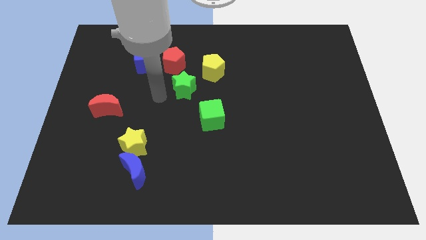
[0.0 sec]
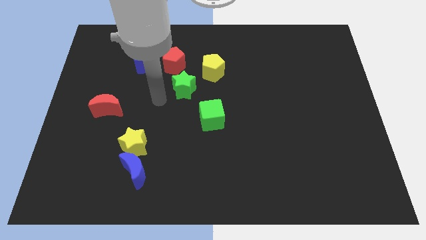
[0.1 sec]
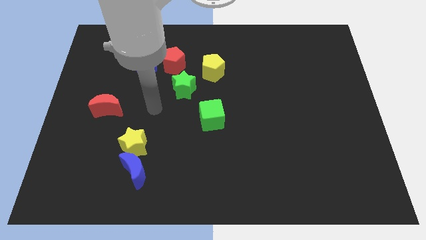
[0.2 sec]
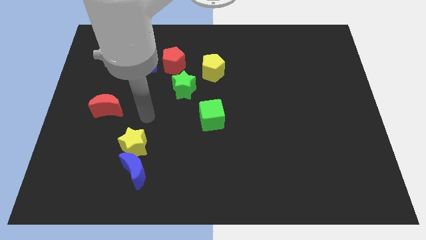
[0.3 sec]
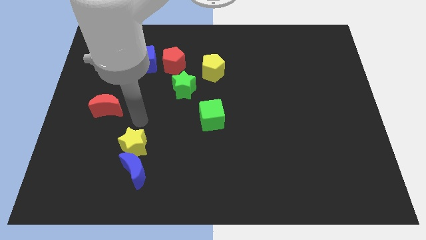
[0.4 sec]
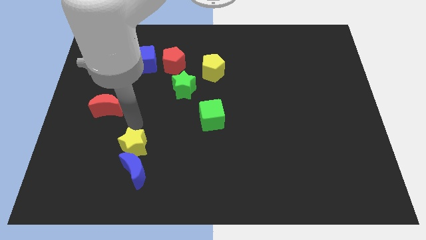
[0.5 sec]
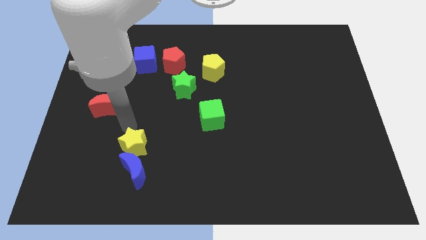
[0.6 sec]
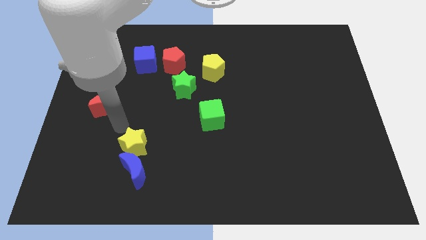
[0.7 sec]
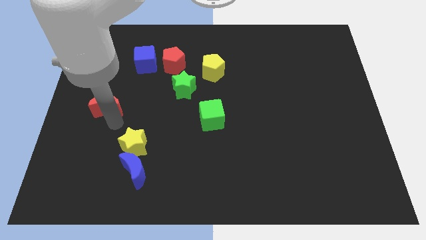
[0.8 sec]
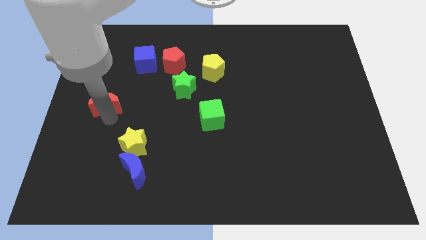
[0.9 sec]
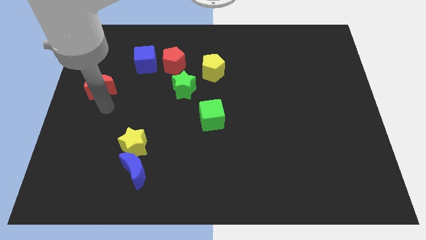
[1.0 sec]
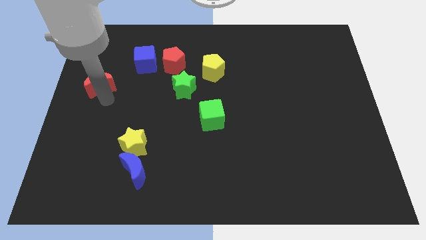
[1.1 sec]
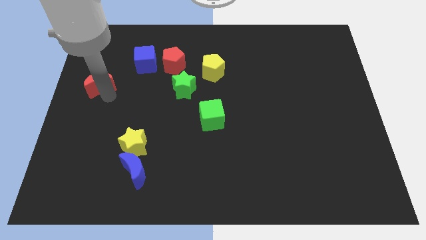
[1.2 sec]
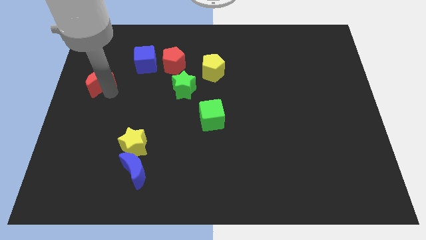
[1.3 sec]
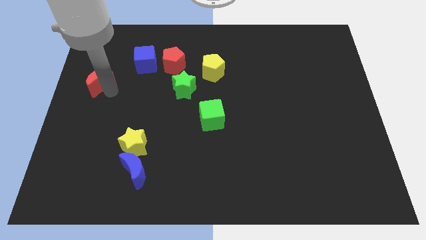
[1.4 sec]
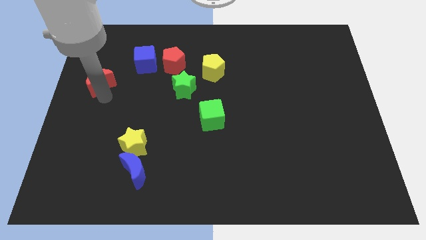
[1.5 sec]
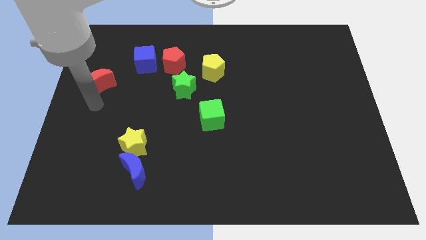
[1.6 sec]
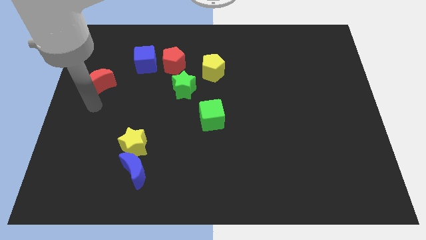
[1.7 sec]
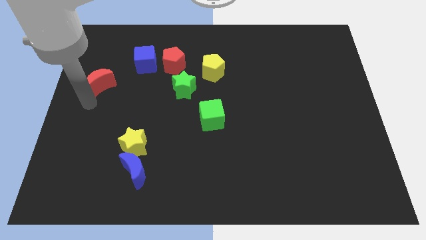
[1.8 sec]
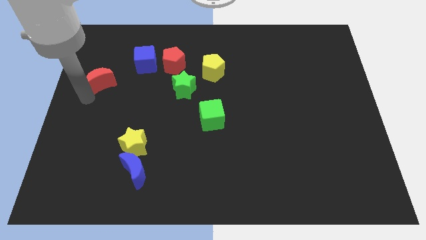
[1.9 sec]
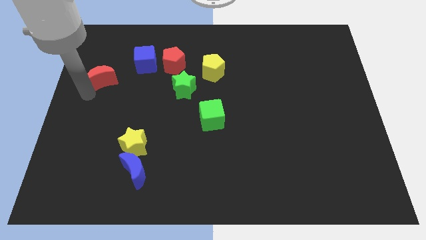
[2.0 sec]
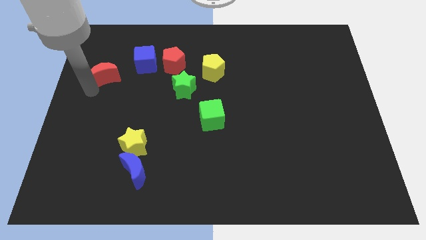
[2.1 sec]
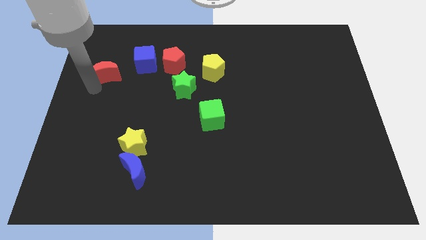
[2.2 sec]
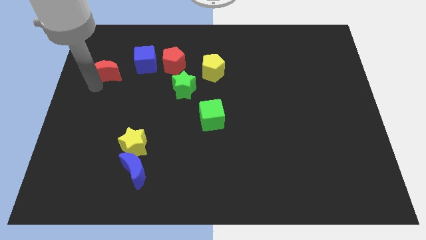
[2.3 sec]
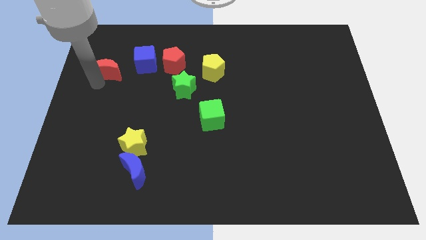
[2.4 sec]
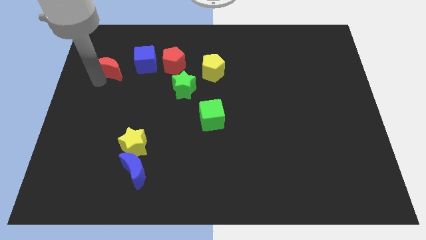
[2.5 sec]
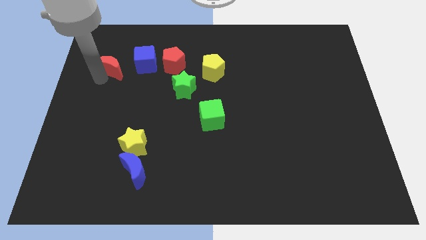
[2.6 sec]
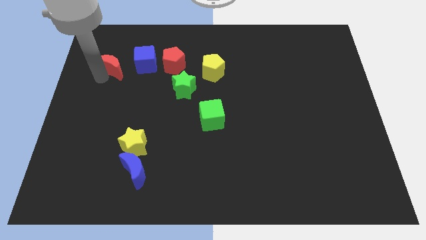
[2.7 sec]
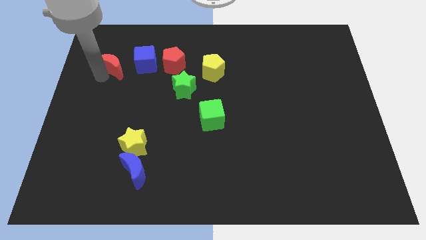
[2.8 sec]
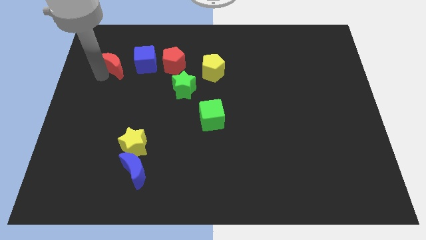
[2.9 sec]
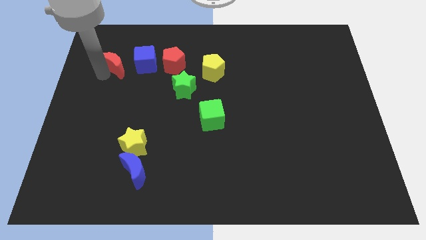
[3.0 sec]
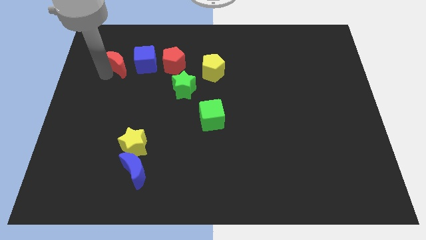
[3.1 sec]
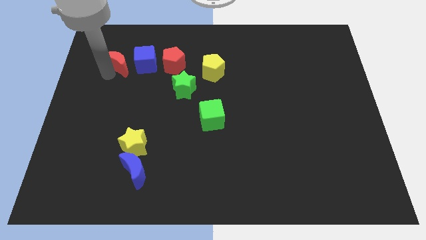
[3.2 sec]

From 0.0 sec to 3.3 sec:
push the red crescent beside the blue cube

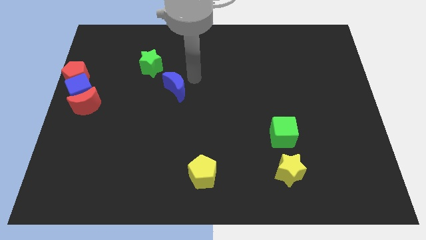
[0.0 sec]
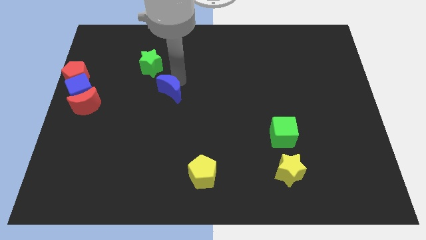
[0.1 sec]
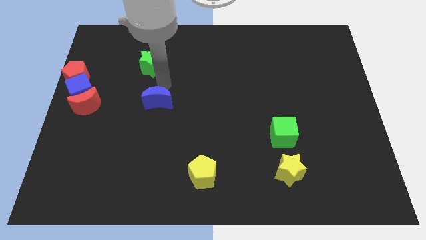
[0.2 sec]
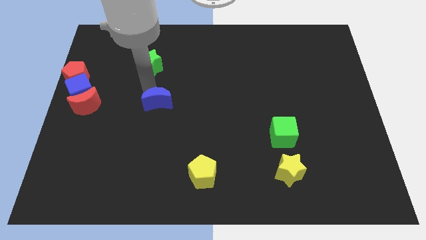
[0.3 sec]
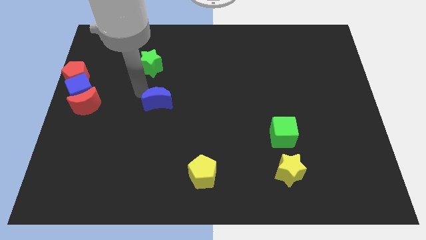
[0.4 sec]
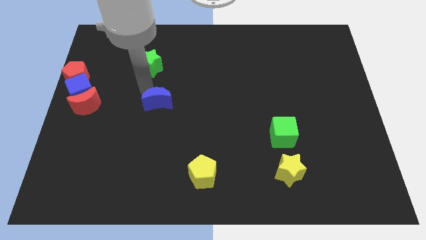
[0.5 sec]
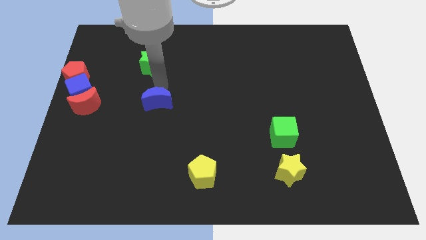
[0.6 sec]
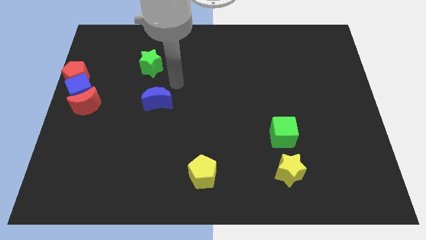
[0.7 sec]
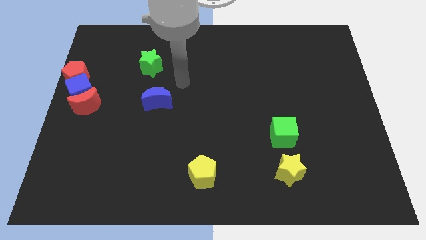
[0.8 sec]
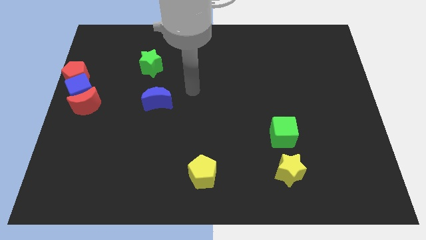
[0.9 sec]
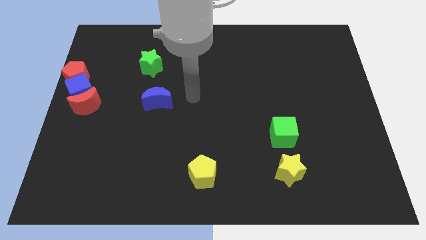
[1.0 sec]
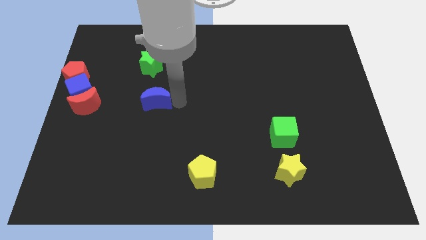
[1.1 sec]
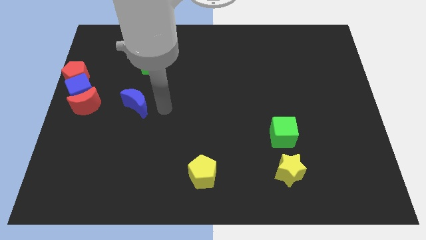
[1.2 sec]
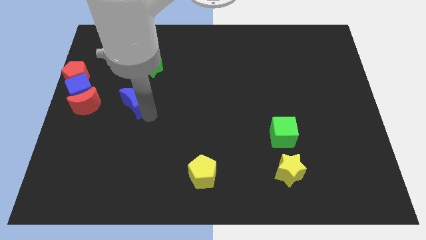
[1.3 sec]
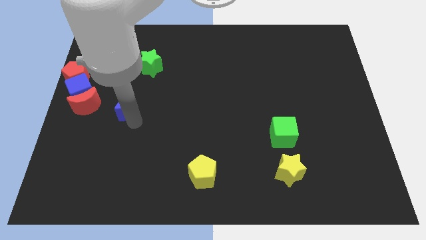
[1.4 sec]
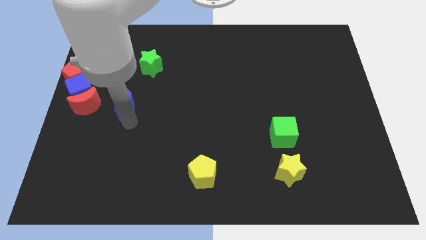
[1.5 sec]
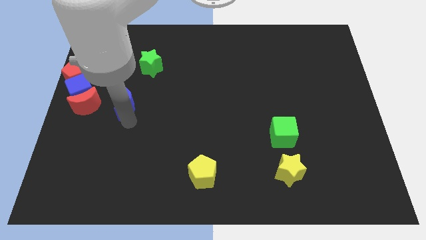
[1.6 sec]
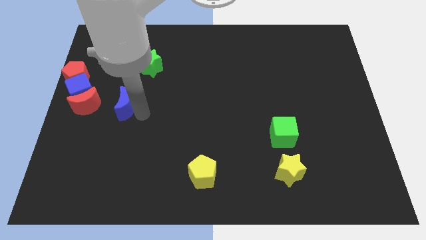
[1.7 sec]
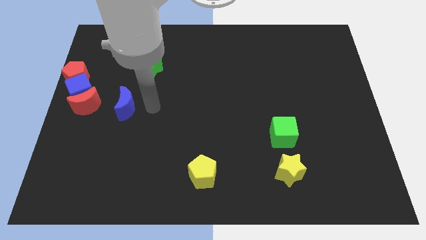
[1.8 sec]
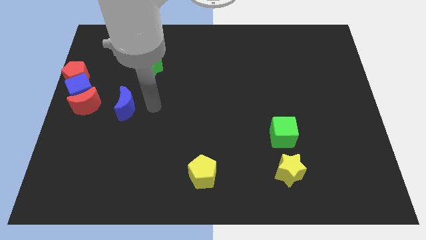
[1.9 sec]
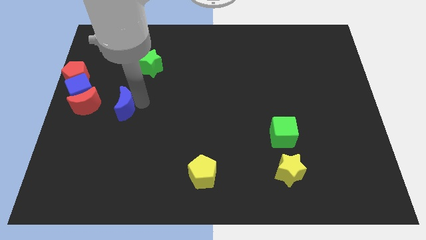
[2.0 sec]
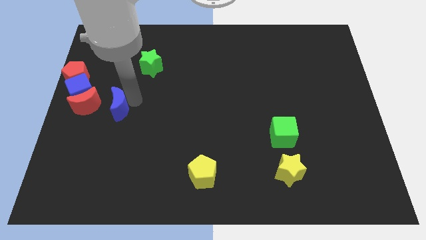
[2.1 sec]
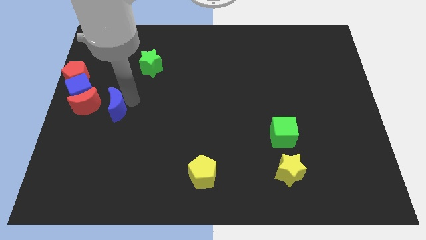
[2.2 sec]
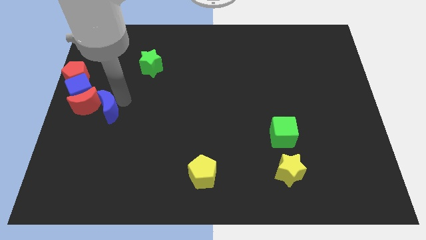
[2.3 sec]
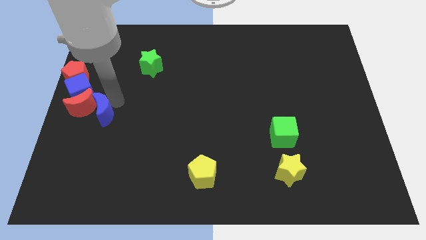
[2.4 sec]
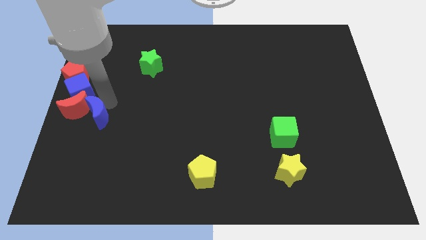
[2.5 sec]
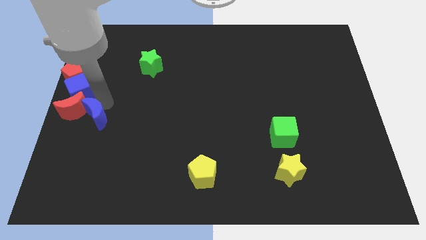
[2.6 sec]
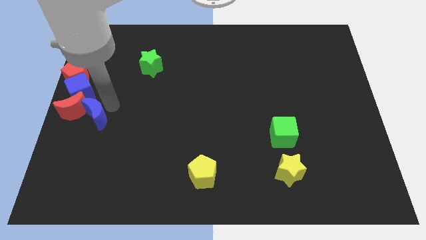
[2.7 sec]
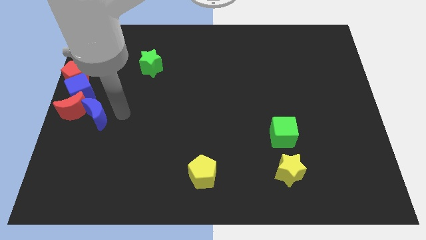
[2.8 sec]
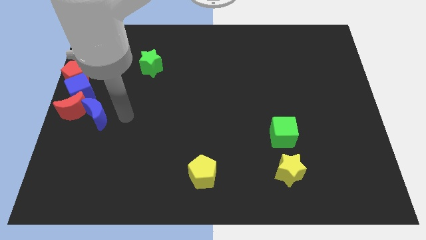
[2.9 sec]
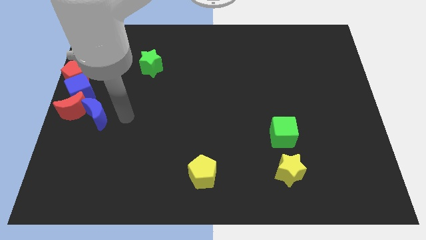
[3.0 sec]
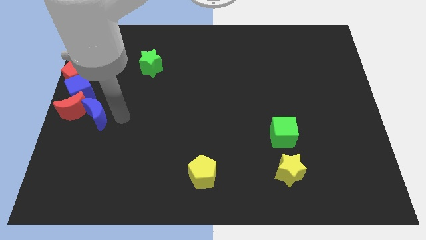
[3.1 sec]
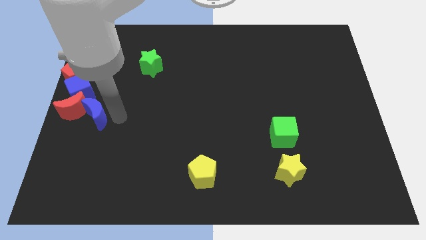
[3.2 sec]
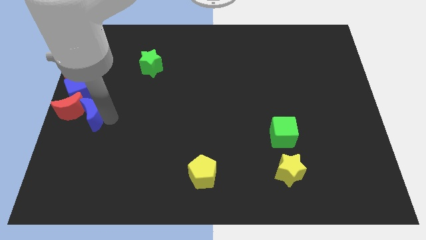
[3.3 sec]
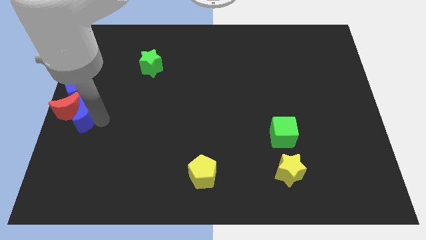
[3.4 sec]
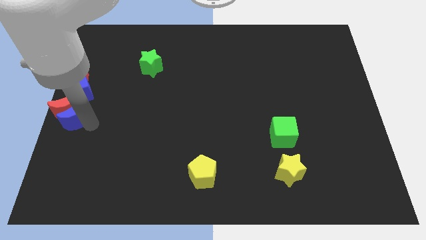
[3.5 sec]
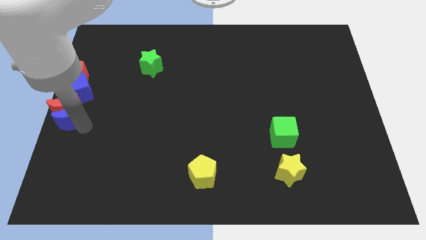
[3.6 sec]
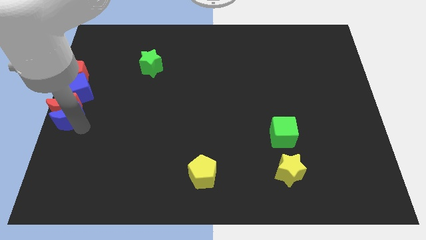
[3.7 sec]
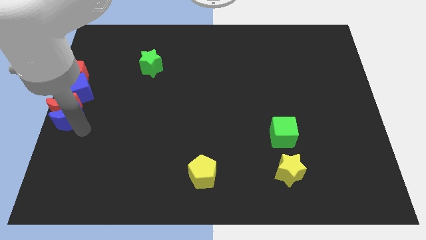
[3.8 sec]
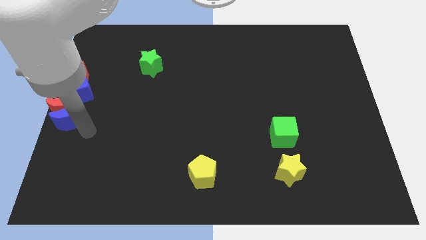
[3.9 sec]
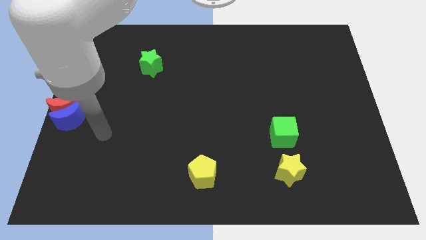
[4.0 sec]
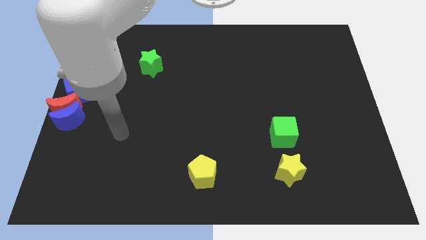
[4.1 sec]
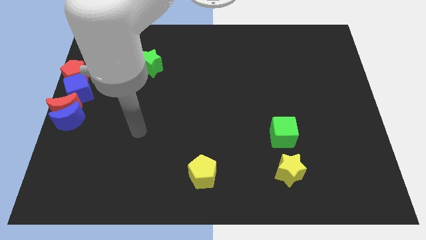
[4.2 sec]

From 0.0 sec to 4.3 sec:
place the blue moon at the center left side of the board

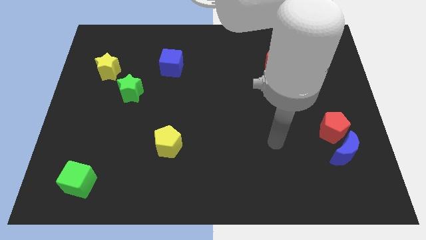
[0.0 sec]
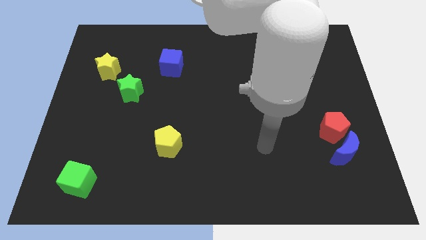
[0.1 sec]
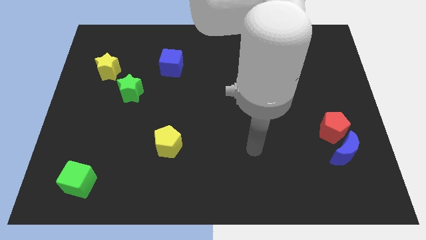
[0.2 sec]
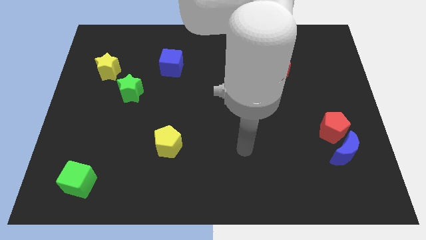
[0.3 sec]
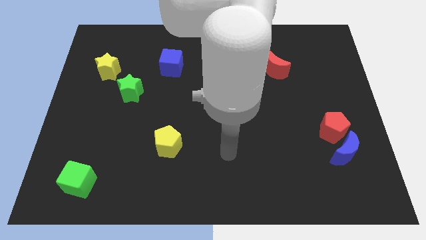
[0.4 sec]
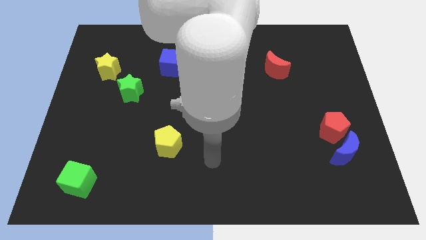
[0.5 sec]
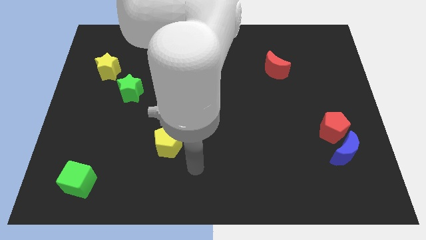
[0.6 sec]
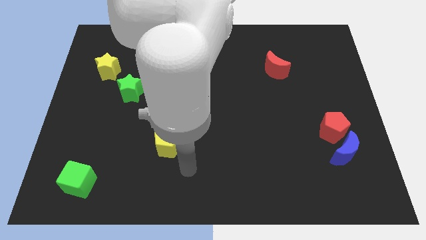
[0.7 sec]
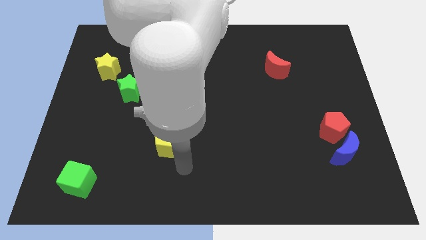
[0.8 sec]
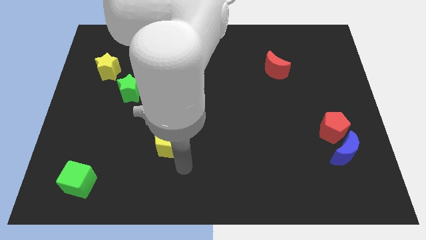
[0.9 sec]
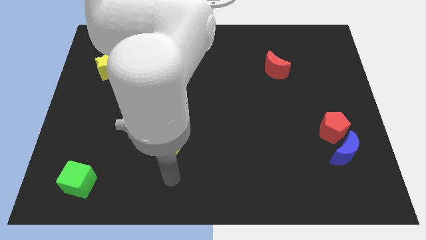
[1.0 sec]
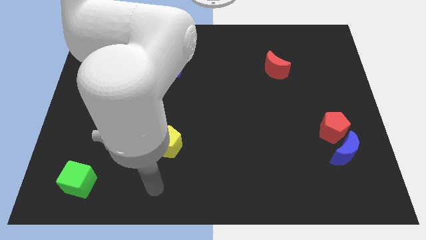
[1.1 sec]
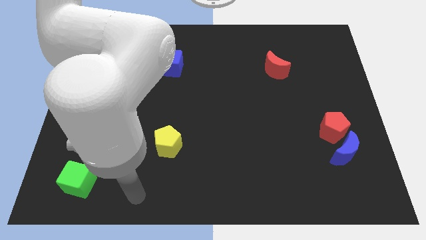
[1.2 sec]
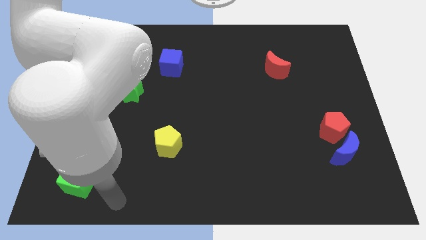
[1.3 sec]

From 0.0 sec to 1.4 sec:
move your arm towards the green cube
